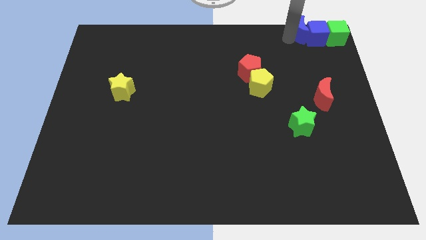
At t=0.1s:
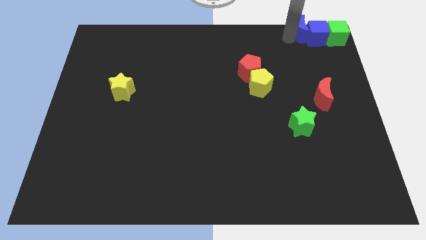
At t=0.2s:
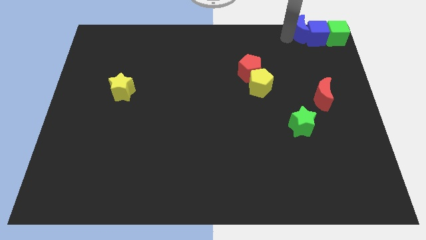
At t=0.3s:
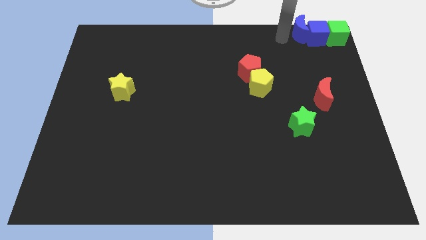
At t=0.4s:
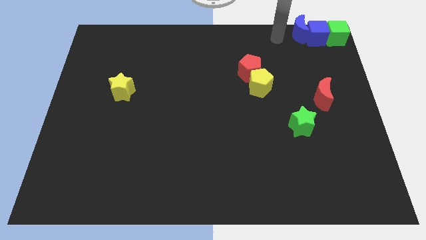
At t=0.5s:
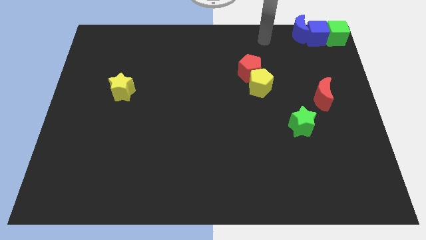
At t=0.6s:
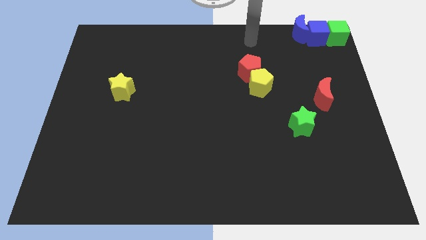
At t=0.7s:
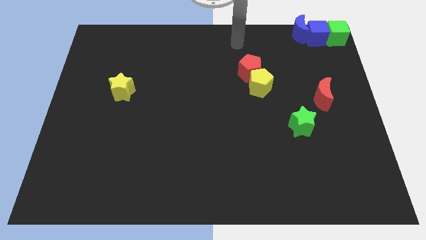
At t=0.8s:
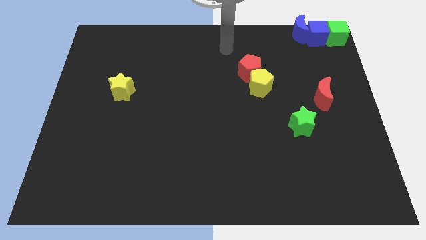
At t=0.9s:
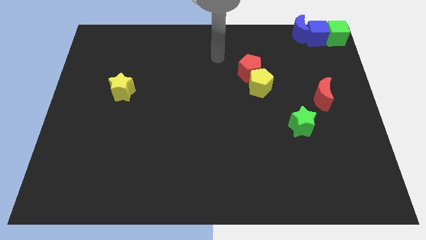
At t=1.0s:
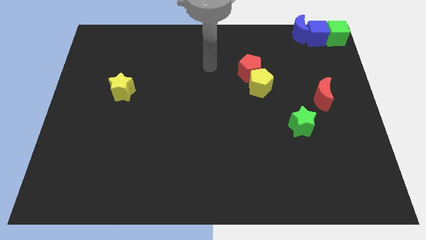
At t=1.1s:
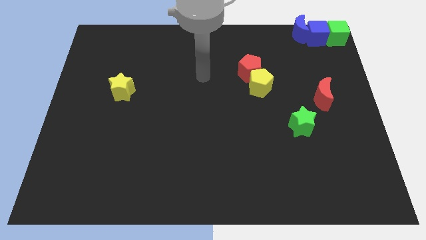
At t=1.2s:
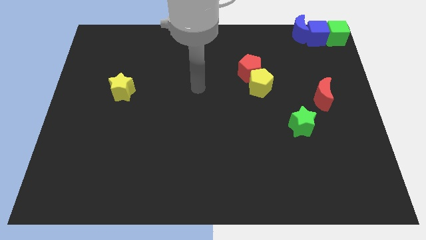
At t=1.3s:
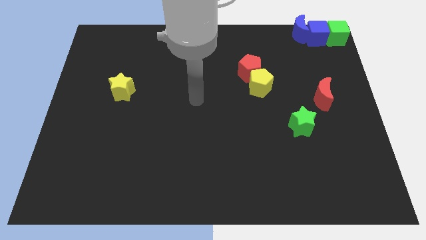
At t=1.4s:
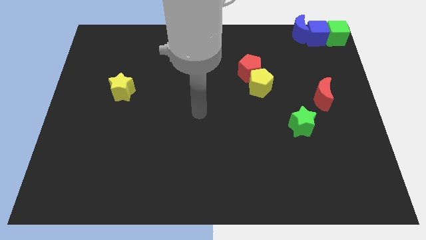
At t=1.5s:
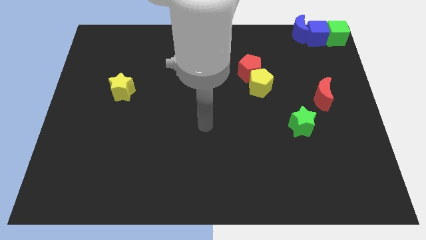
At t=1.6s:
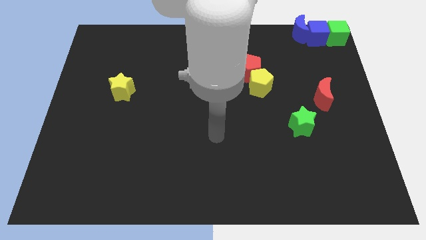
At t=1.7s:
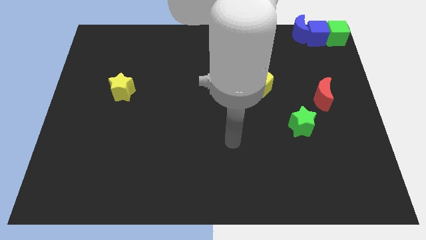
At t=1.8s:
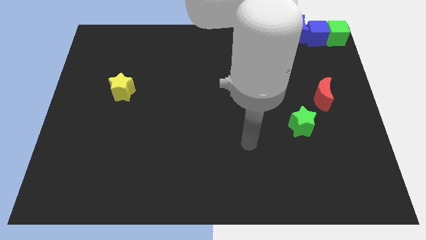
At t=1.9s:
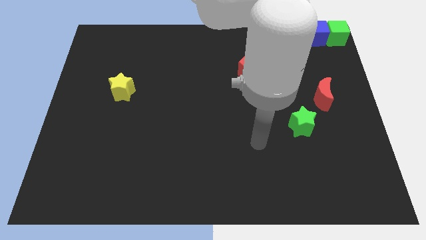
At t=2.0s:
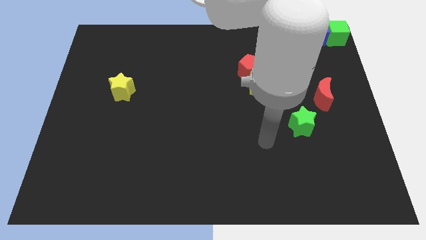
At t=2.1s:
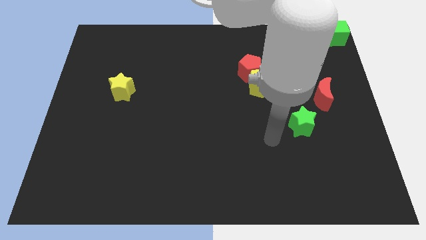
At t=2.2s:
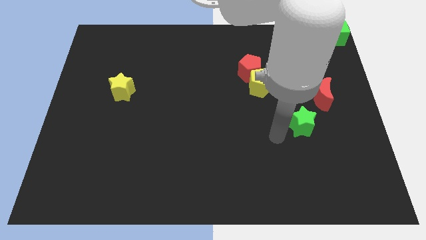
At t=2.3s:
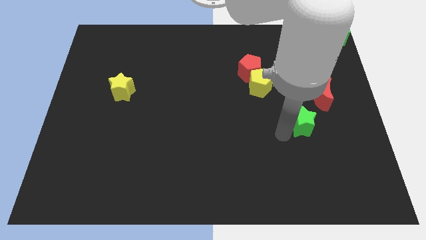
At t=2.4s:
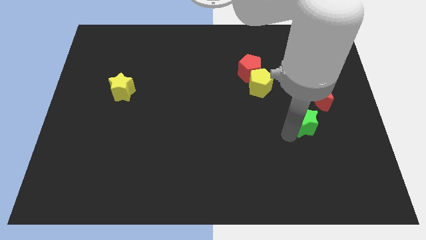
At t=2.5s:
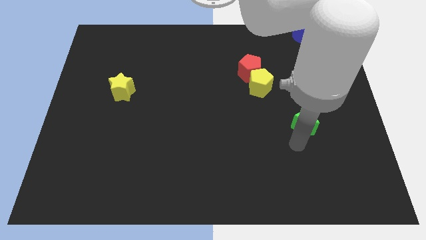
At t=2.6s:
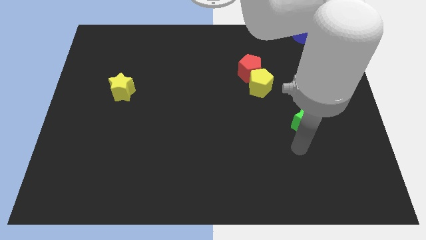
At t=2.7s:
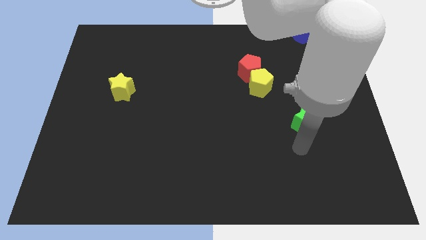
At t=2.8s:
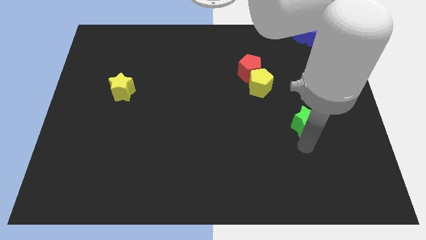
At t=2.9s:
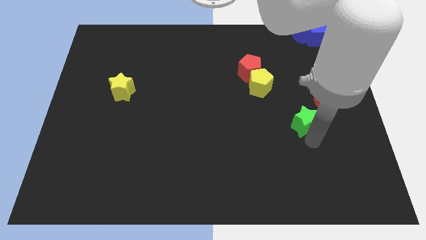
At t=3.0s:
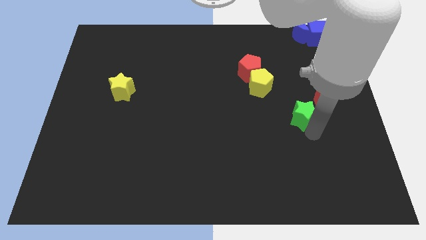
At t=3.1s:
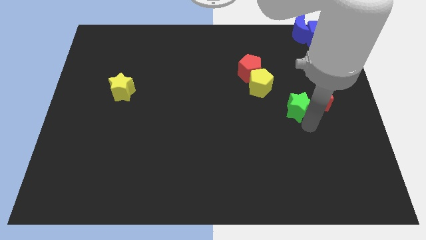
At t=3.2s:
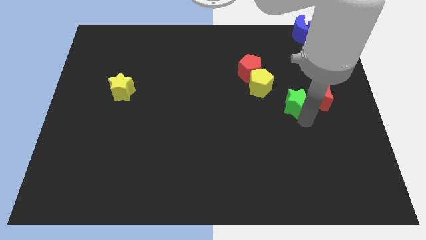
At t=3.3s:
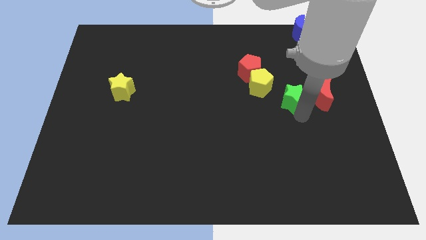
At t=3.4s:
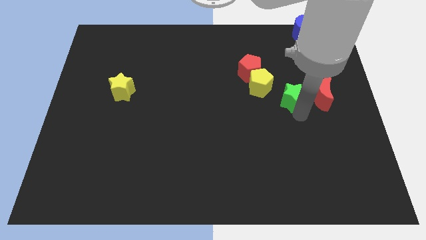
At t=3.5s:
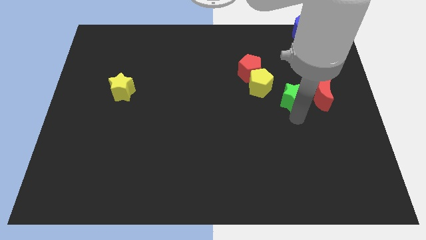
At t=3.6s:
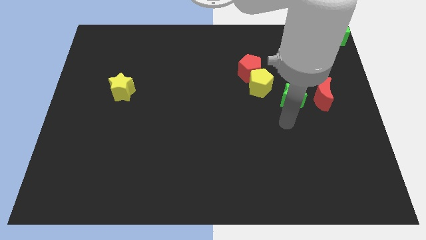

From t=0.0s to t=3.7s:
move the green star parallel left to the red moon

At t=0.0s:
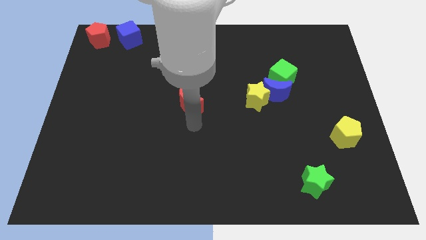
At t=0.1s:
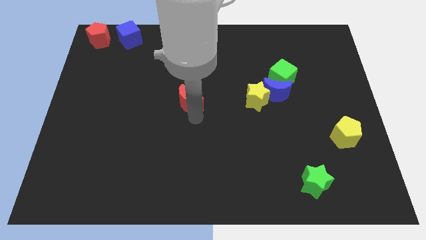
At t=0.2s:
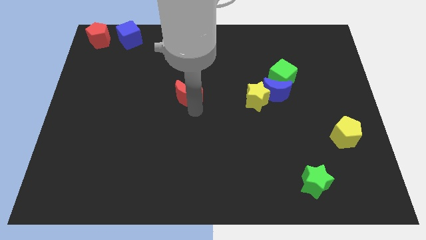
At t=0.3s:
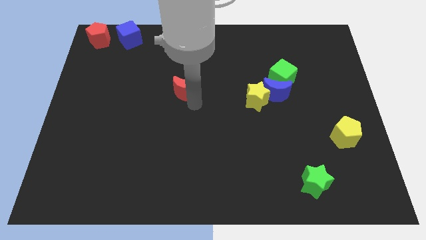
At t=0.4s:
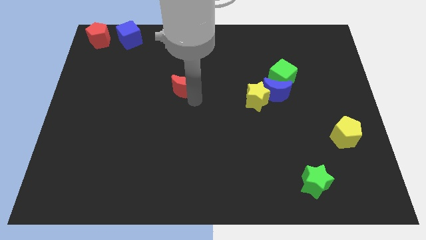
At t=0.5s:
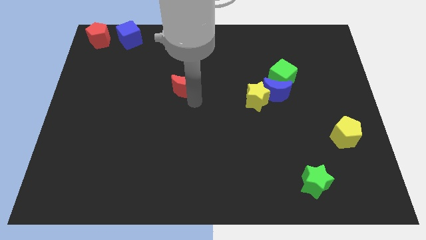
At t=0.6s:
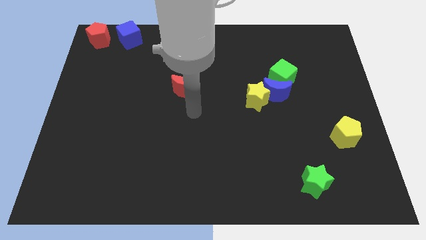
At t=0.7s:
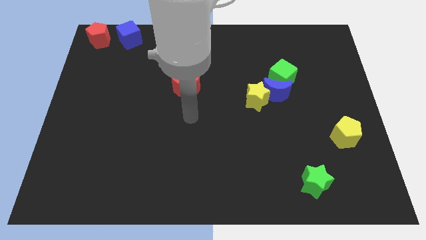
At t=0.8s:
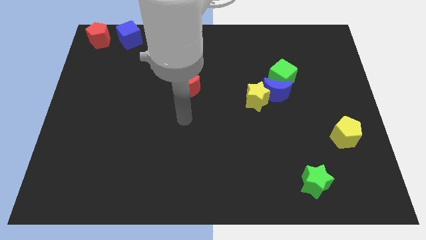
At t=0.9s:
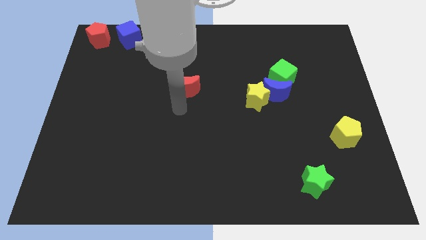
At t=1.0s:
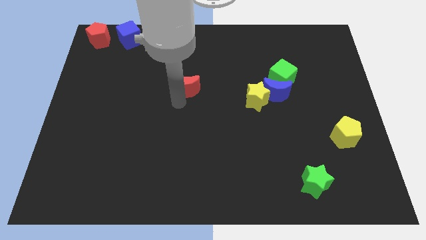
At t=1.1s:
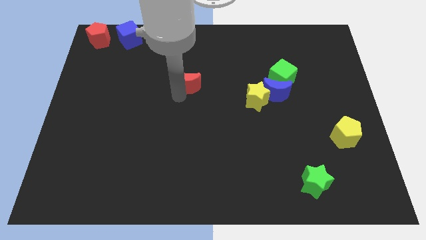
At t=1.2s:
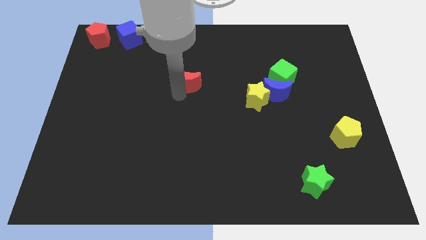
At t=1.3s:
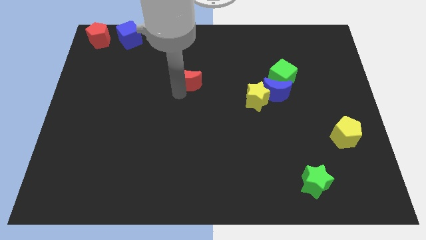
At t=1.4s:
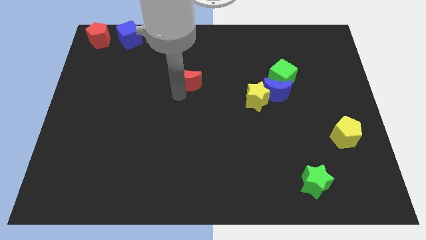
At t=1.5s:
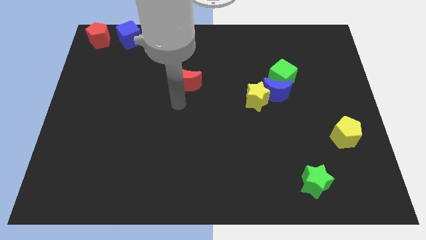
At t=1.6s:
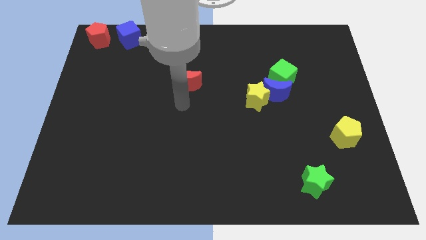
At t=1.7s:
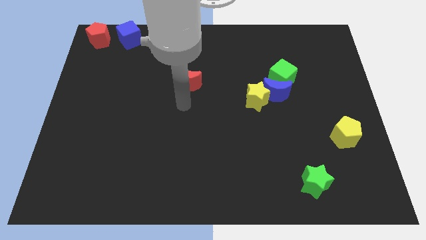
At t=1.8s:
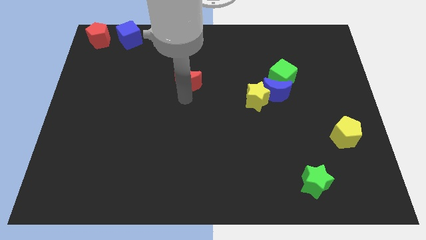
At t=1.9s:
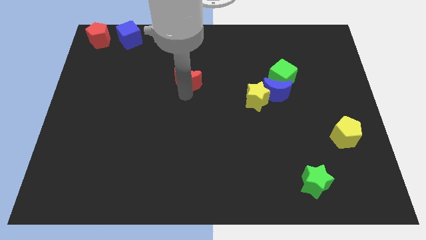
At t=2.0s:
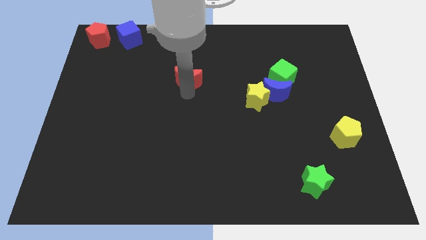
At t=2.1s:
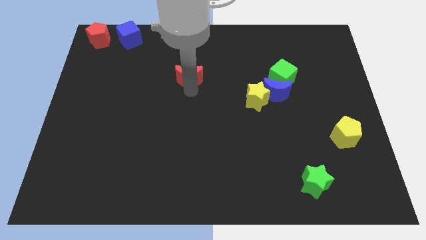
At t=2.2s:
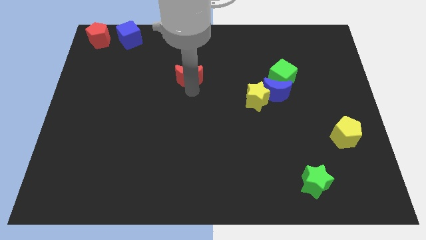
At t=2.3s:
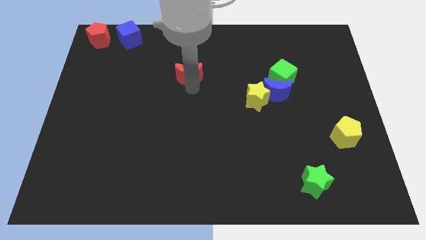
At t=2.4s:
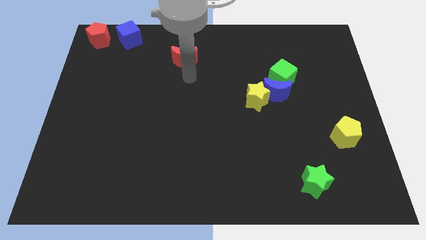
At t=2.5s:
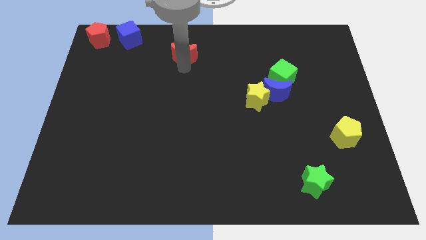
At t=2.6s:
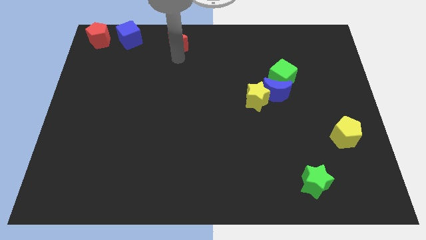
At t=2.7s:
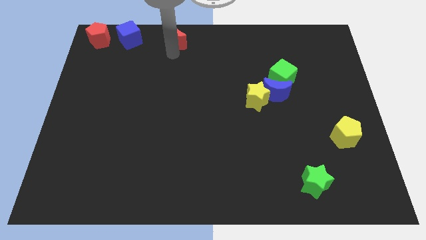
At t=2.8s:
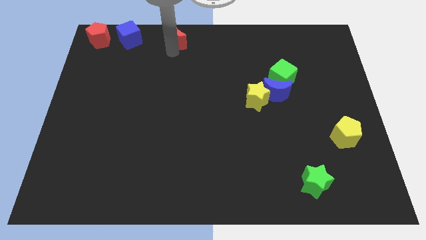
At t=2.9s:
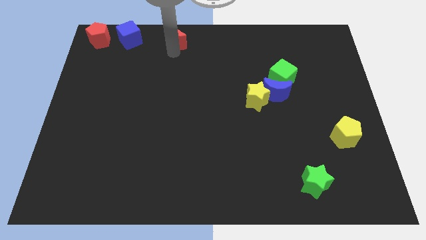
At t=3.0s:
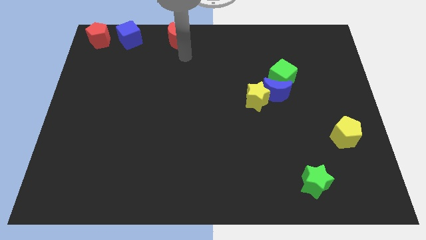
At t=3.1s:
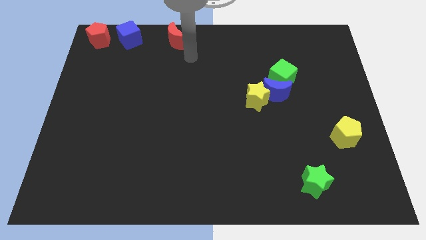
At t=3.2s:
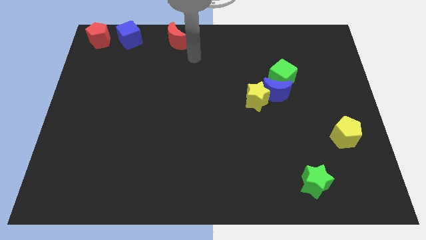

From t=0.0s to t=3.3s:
place red moon to center top

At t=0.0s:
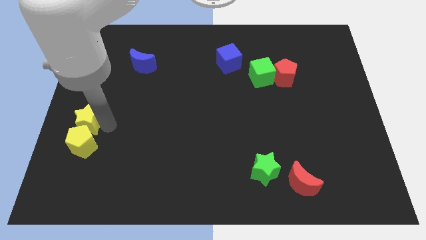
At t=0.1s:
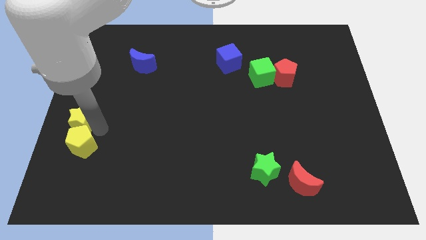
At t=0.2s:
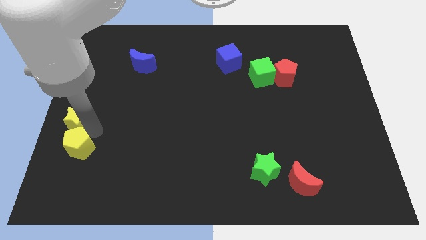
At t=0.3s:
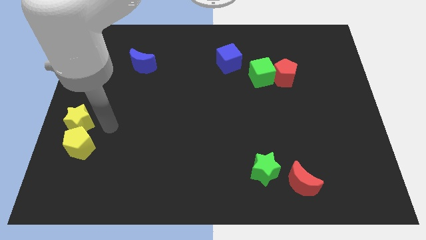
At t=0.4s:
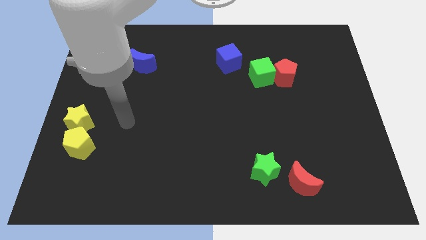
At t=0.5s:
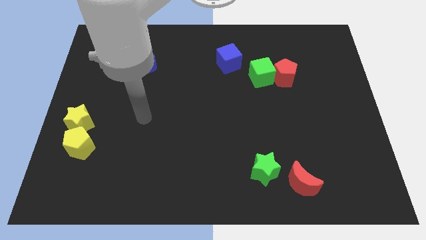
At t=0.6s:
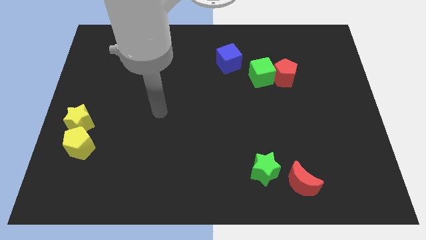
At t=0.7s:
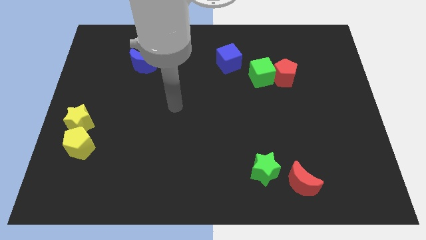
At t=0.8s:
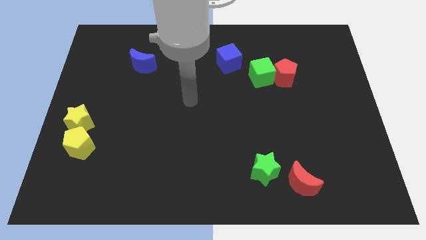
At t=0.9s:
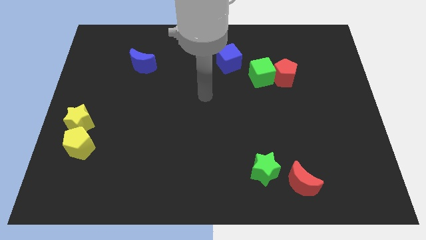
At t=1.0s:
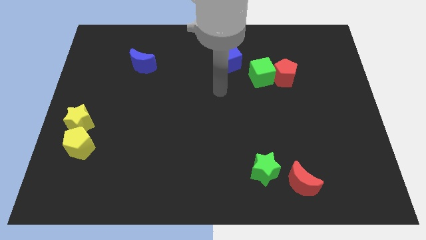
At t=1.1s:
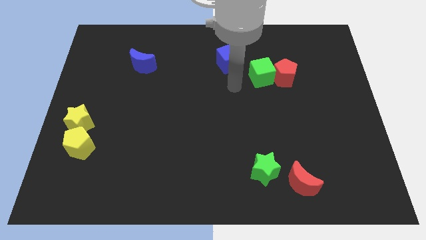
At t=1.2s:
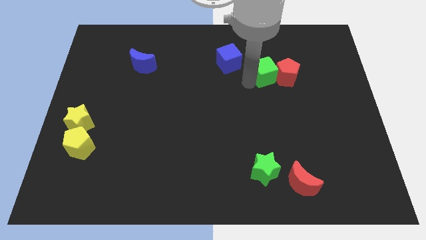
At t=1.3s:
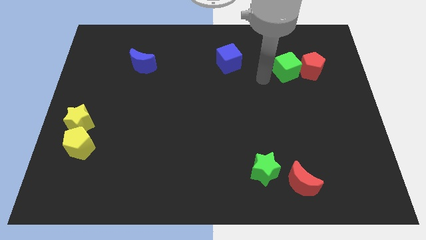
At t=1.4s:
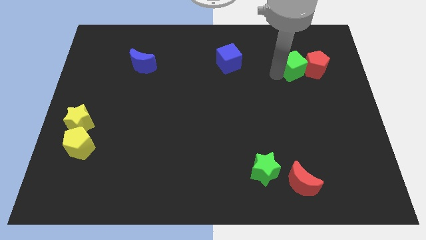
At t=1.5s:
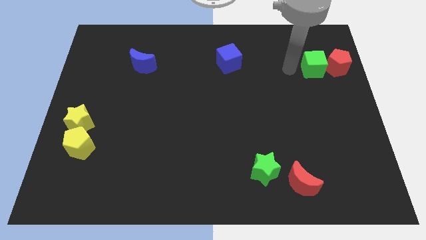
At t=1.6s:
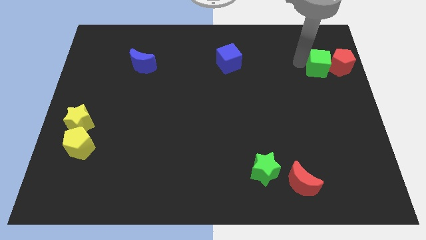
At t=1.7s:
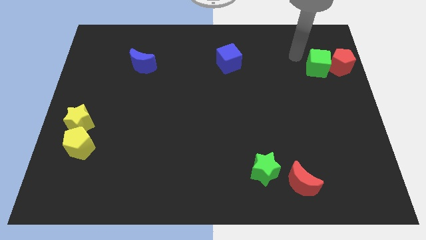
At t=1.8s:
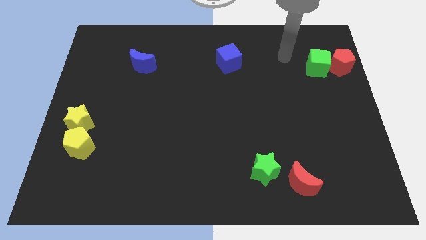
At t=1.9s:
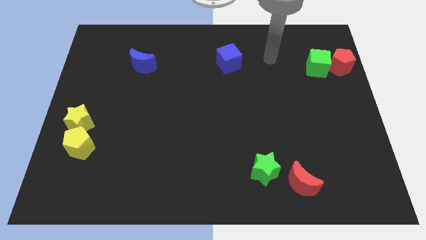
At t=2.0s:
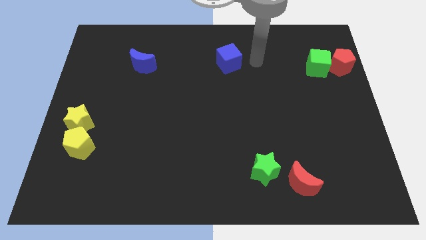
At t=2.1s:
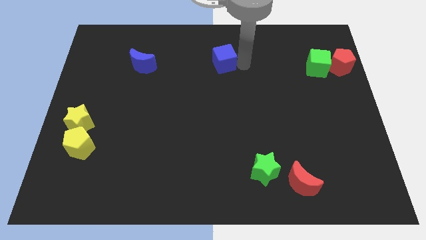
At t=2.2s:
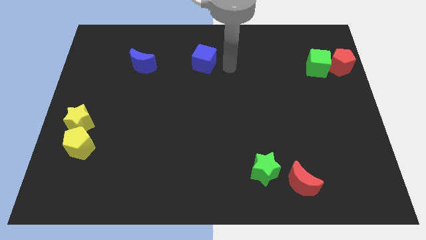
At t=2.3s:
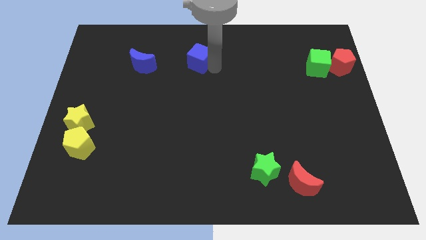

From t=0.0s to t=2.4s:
push the green cube and red pentagon together towards the right side
